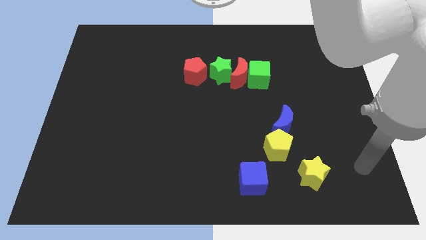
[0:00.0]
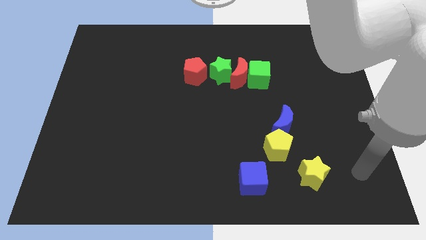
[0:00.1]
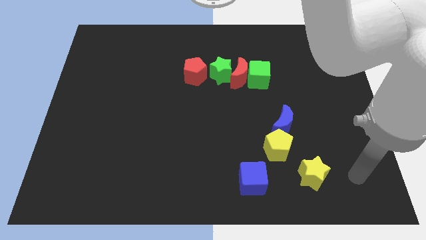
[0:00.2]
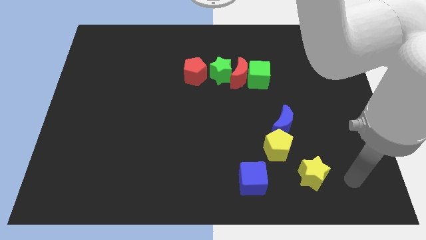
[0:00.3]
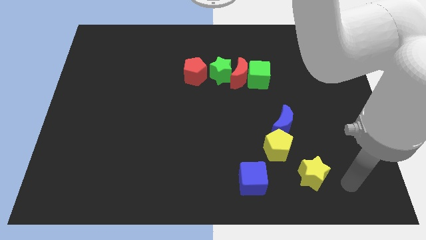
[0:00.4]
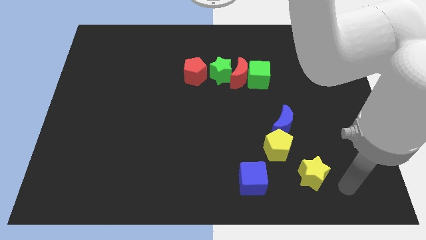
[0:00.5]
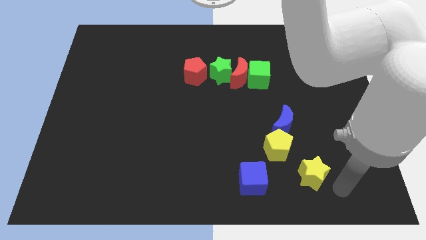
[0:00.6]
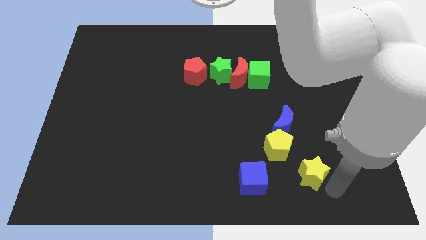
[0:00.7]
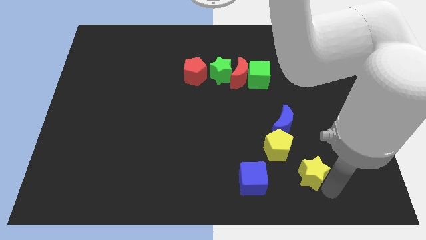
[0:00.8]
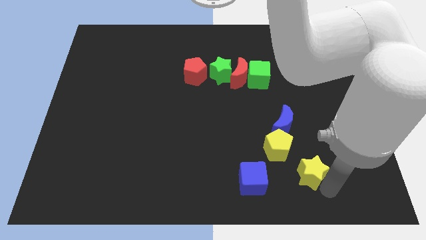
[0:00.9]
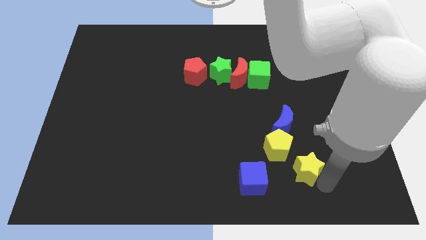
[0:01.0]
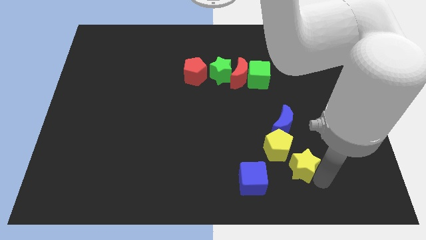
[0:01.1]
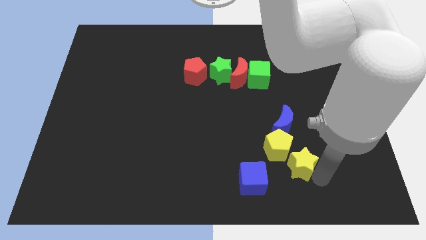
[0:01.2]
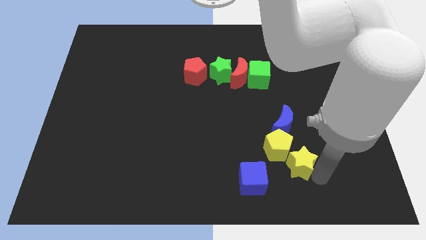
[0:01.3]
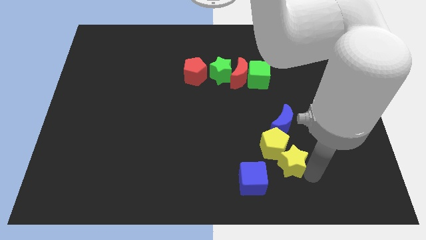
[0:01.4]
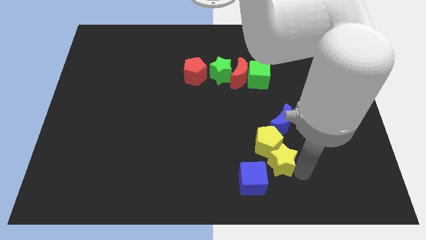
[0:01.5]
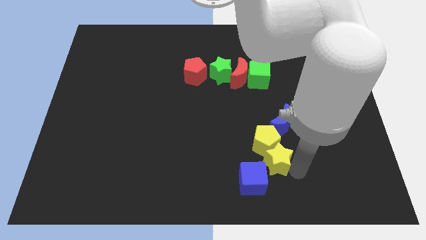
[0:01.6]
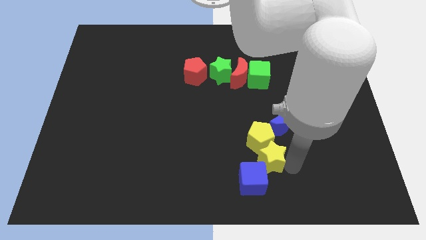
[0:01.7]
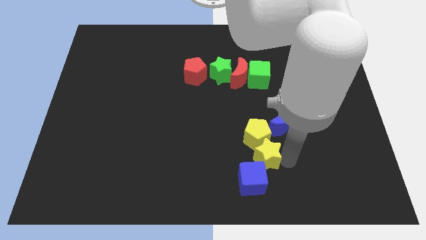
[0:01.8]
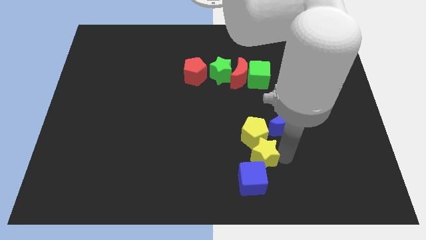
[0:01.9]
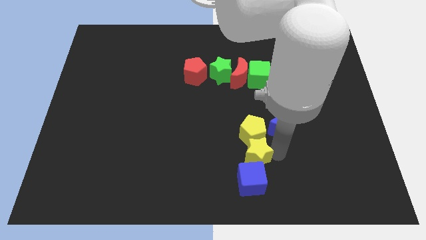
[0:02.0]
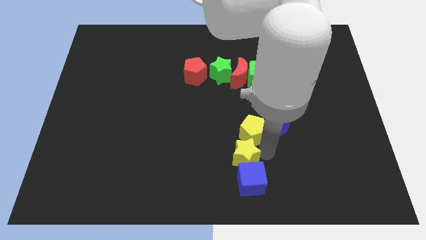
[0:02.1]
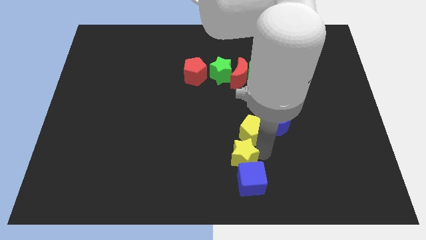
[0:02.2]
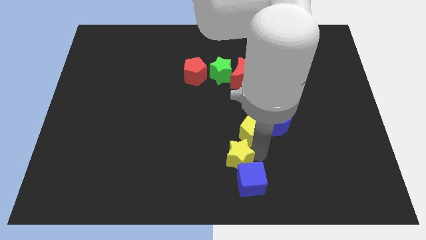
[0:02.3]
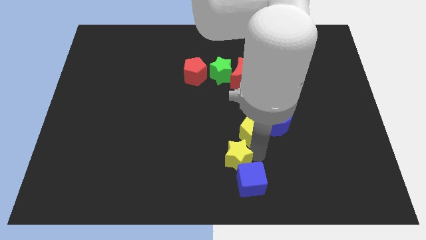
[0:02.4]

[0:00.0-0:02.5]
move yellow star diagonally below the yellow pentagon

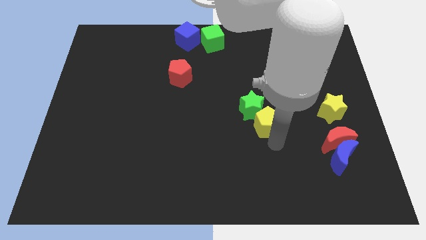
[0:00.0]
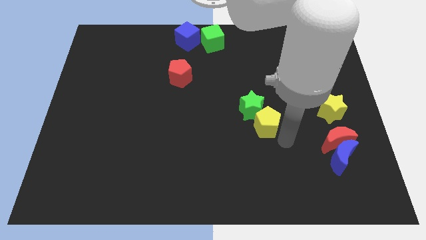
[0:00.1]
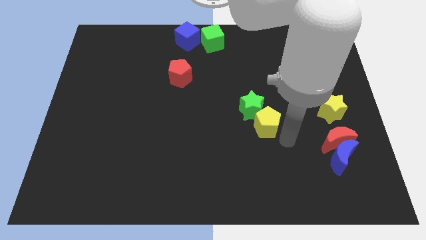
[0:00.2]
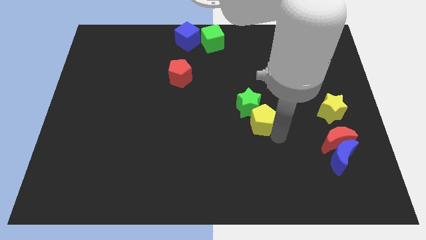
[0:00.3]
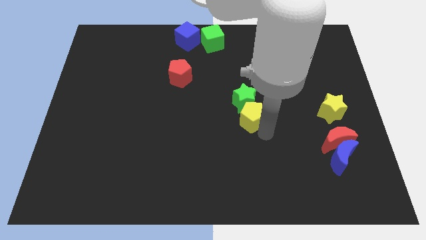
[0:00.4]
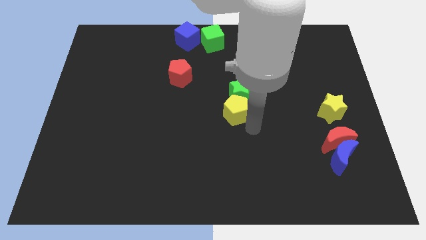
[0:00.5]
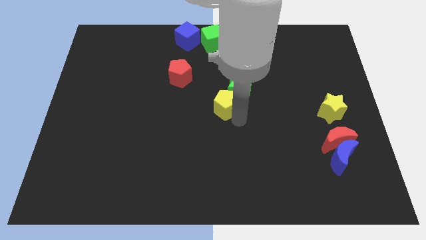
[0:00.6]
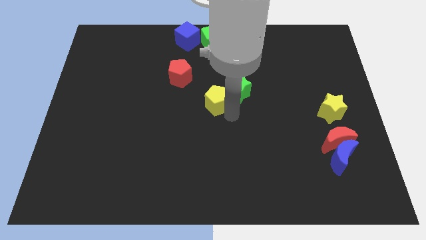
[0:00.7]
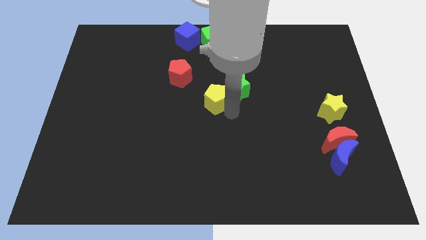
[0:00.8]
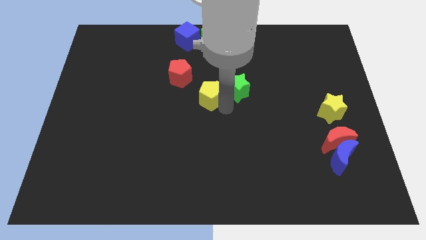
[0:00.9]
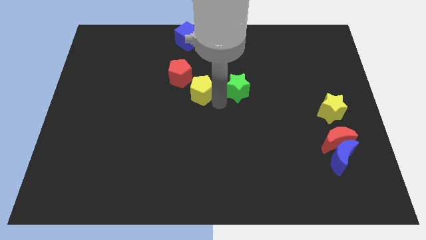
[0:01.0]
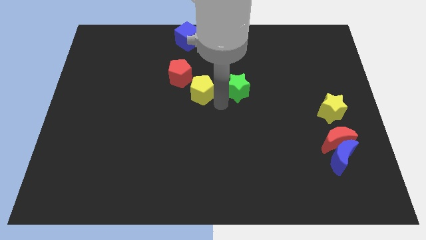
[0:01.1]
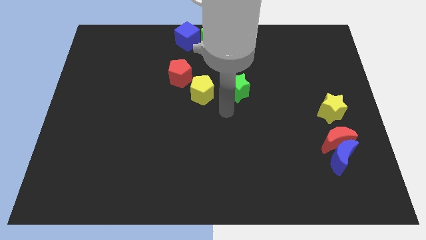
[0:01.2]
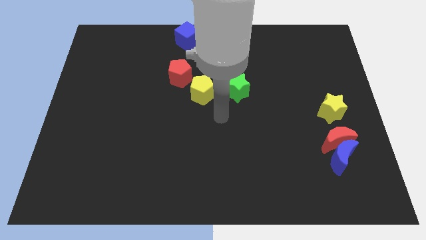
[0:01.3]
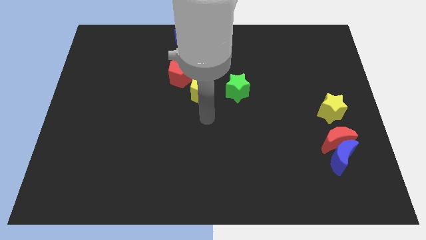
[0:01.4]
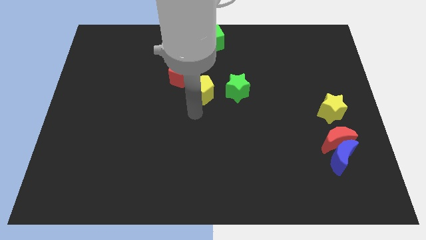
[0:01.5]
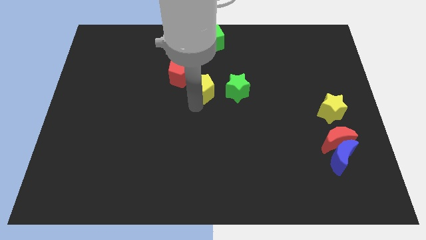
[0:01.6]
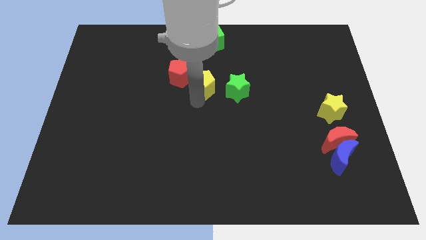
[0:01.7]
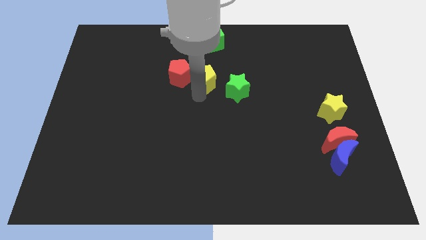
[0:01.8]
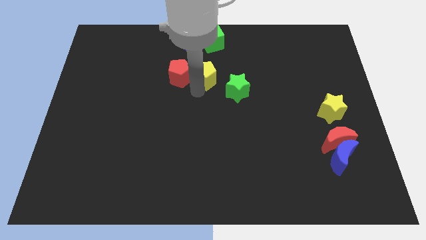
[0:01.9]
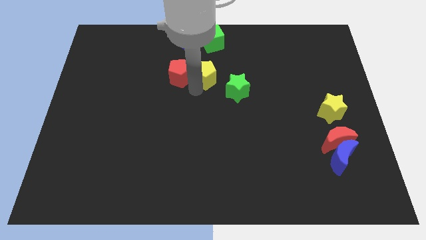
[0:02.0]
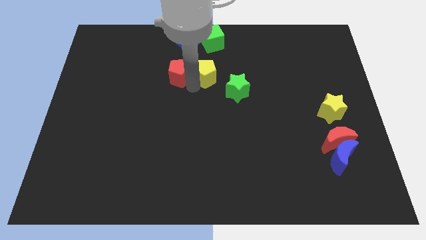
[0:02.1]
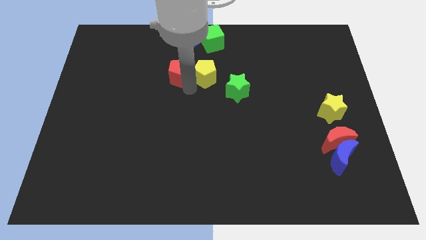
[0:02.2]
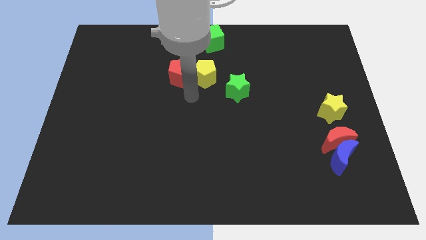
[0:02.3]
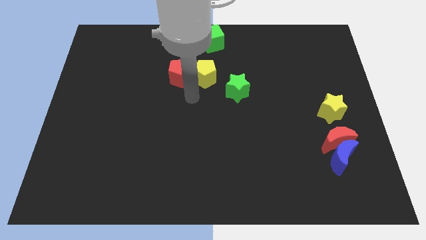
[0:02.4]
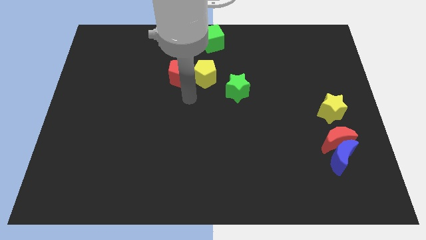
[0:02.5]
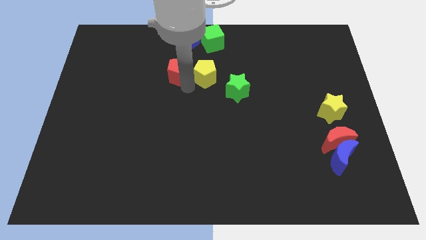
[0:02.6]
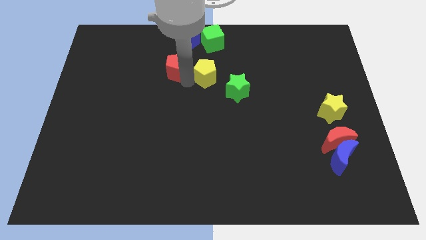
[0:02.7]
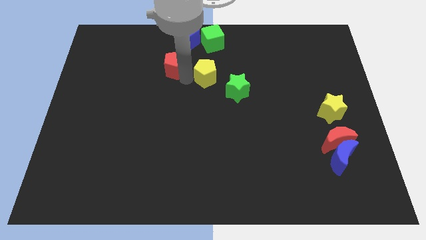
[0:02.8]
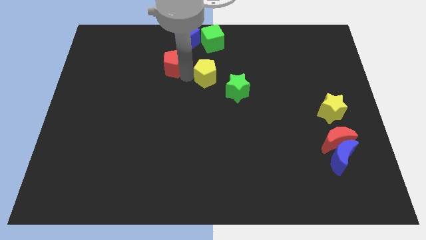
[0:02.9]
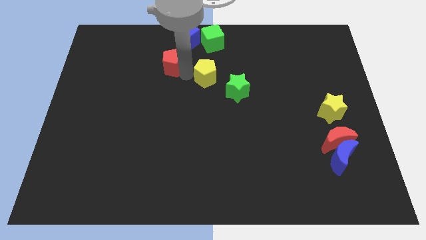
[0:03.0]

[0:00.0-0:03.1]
place the yellow pentagon to the bottom right to the red pentagon

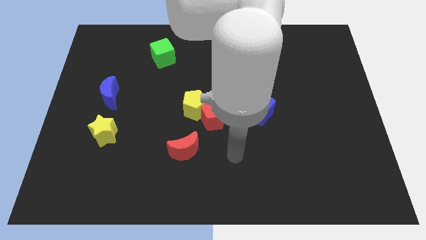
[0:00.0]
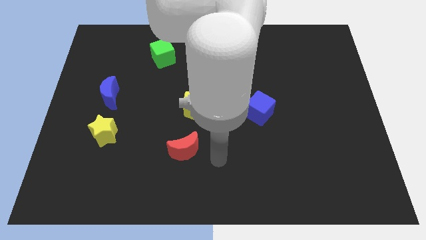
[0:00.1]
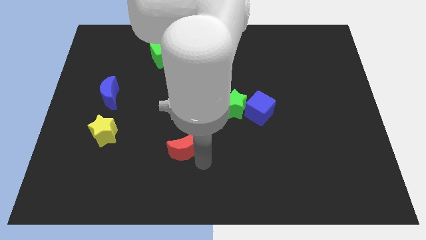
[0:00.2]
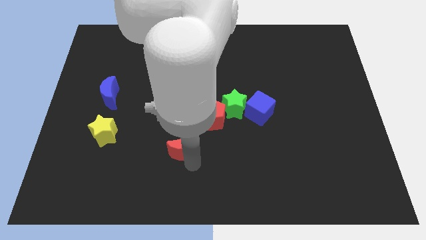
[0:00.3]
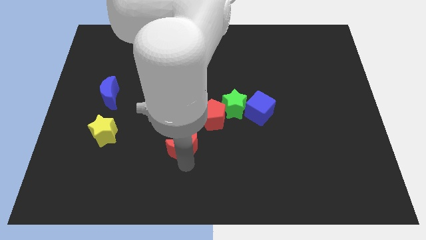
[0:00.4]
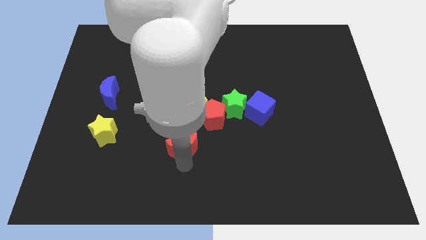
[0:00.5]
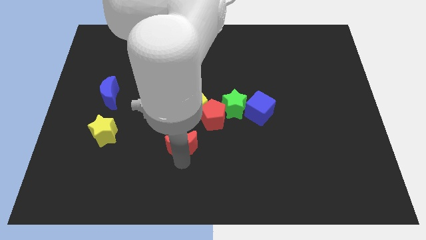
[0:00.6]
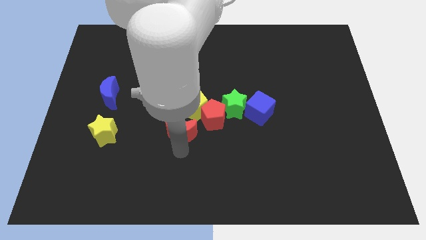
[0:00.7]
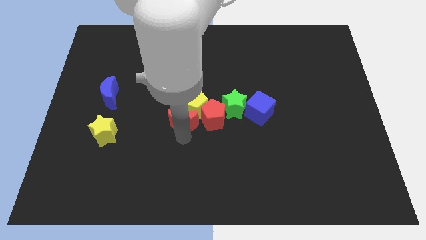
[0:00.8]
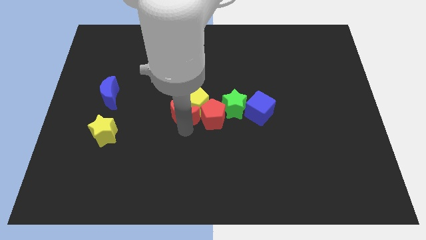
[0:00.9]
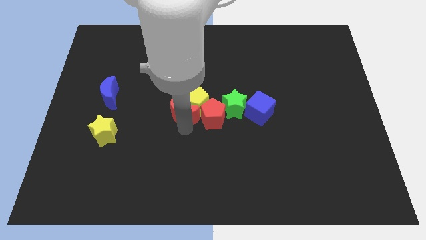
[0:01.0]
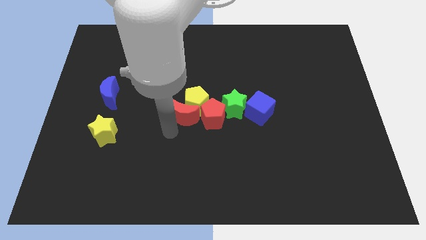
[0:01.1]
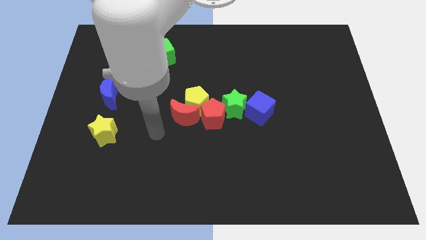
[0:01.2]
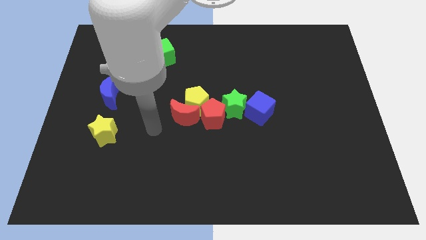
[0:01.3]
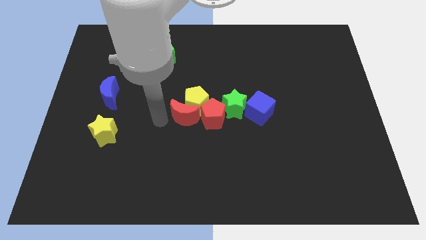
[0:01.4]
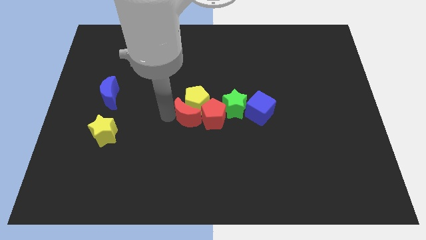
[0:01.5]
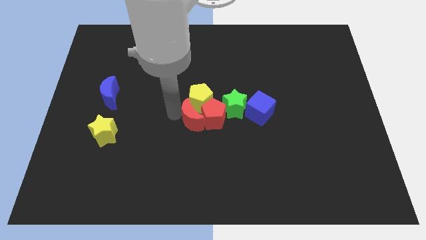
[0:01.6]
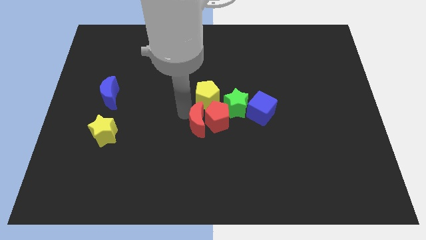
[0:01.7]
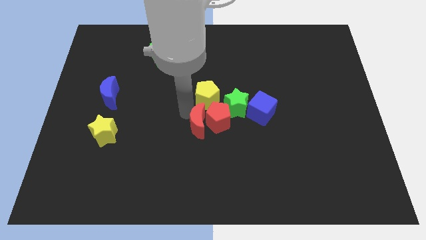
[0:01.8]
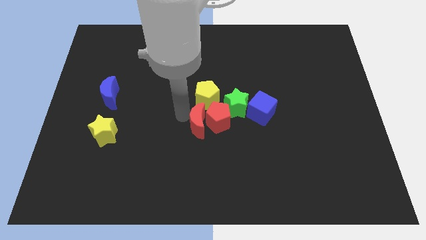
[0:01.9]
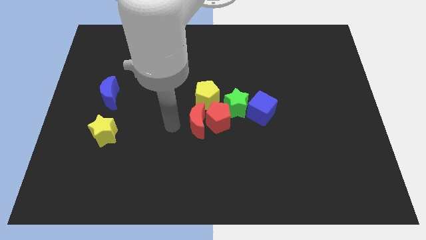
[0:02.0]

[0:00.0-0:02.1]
place the red moon into red pentagon

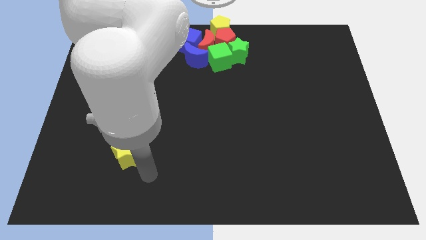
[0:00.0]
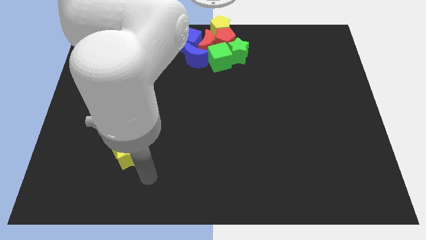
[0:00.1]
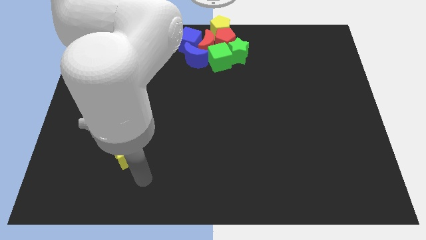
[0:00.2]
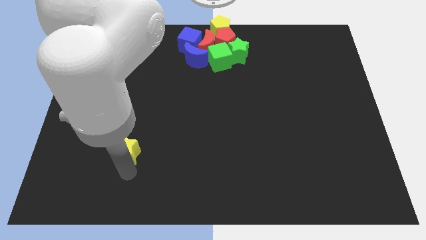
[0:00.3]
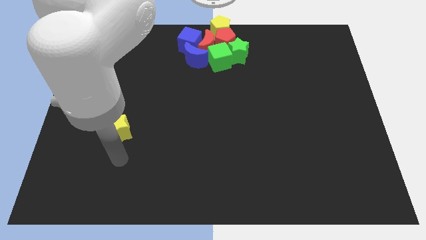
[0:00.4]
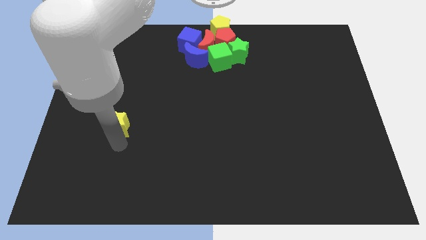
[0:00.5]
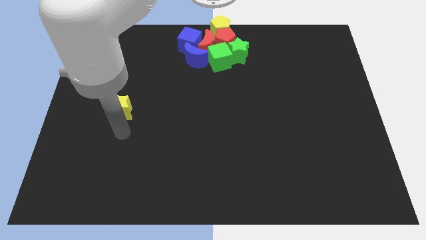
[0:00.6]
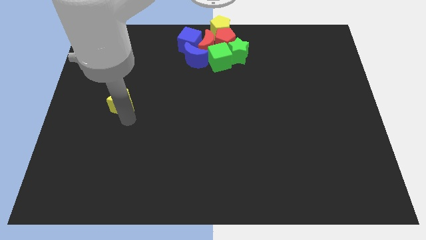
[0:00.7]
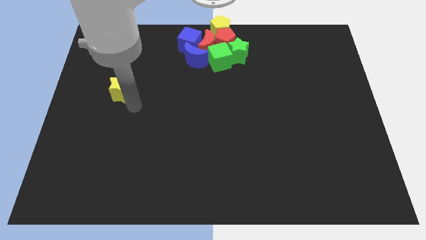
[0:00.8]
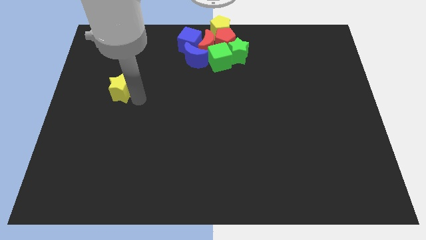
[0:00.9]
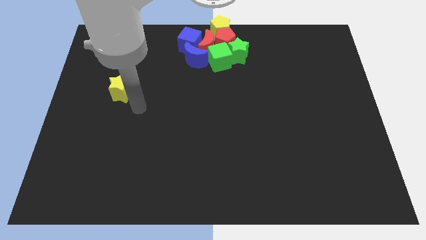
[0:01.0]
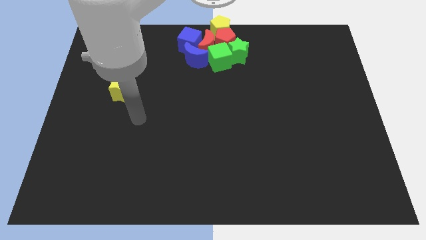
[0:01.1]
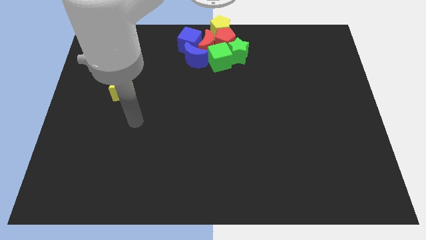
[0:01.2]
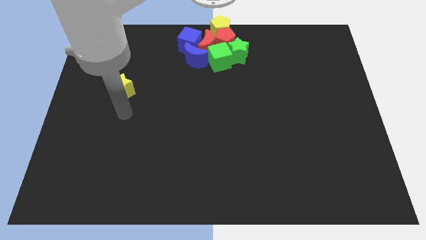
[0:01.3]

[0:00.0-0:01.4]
push the yellow star slightly towards top
